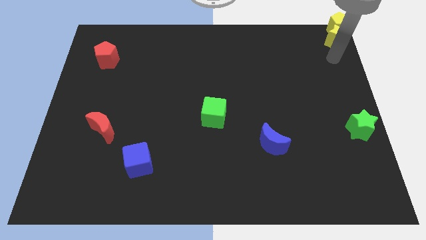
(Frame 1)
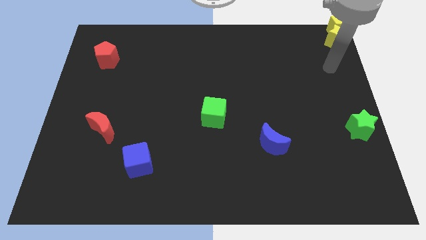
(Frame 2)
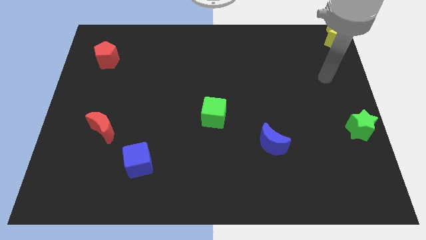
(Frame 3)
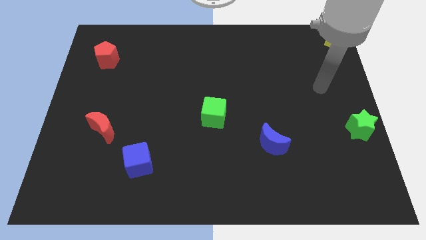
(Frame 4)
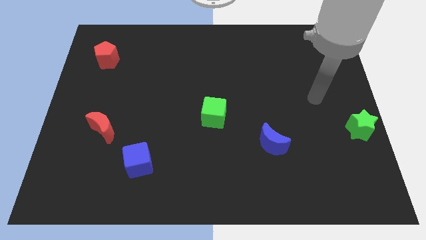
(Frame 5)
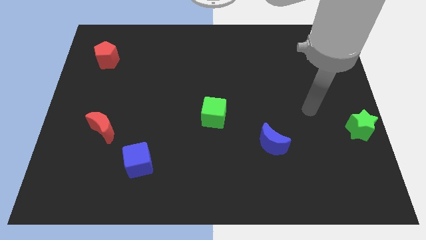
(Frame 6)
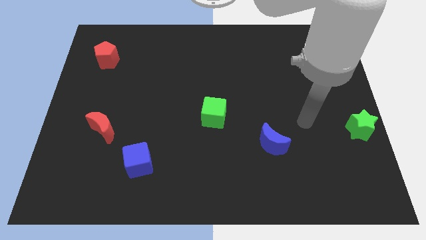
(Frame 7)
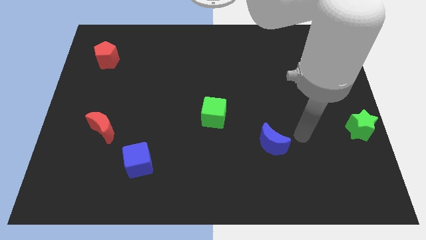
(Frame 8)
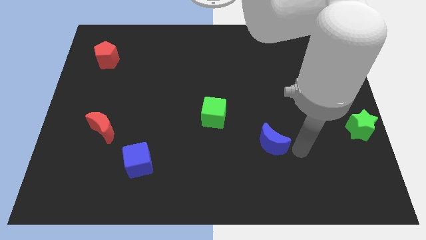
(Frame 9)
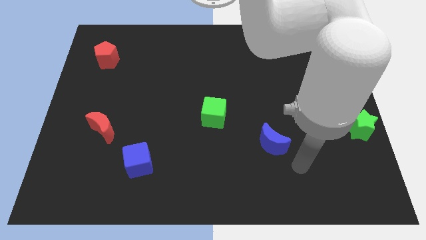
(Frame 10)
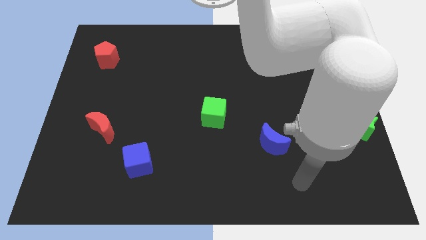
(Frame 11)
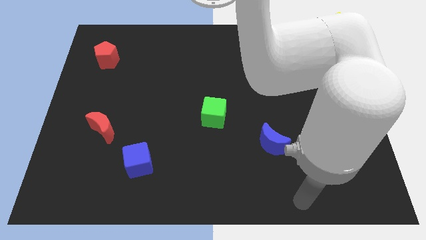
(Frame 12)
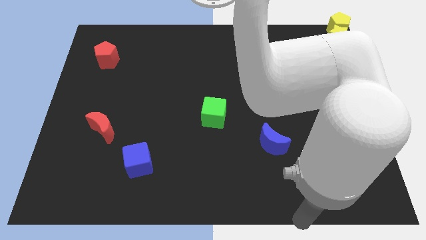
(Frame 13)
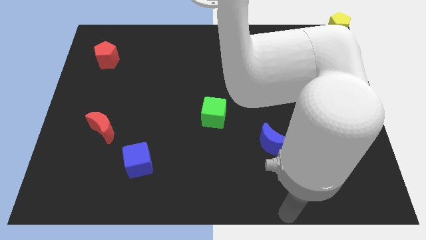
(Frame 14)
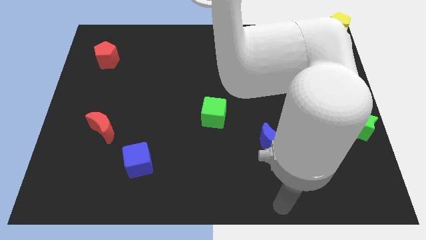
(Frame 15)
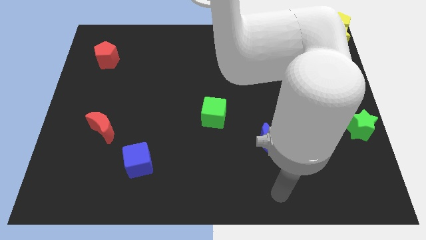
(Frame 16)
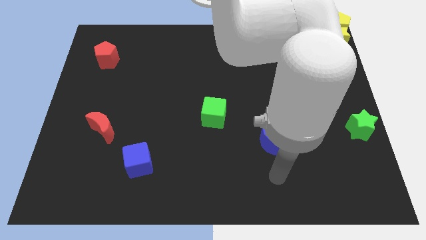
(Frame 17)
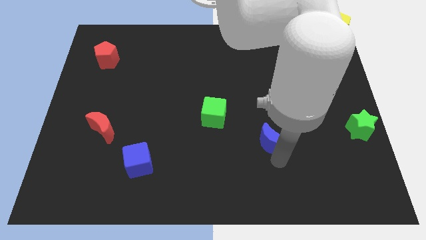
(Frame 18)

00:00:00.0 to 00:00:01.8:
move your arm towards blue crescent

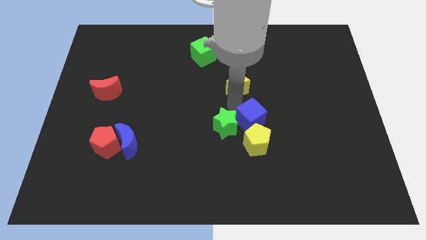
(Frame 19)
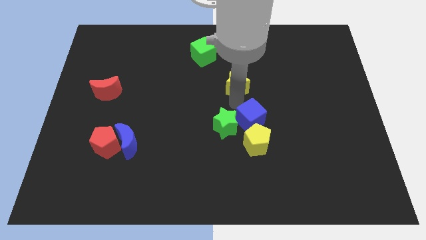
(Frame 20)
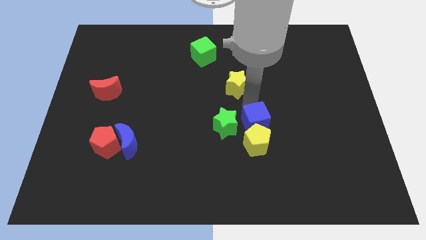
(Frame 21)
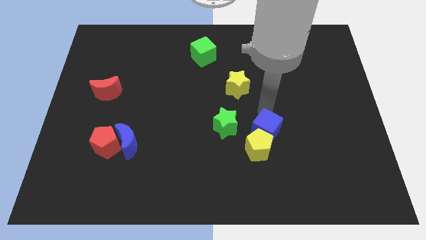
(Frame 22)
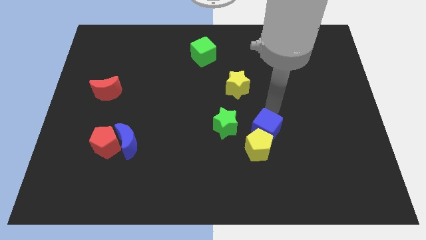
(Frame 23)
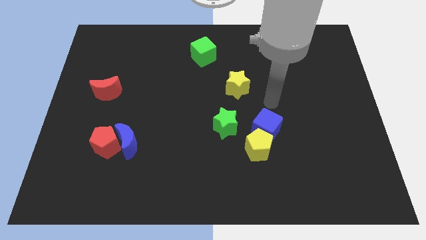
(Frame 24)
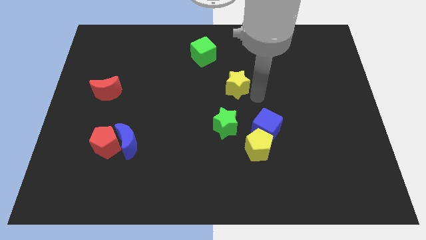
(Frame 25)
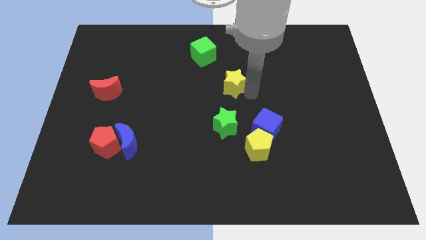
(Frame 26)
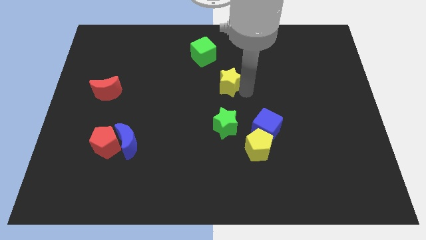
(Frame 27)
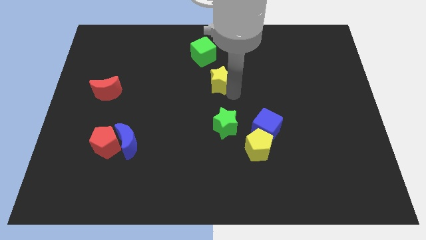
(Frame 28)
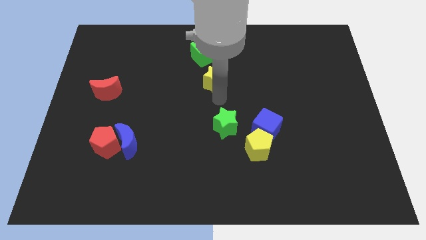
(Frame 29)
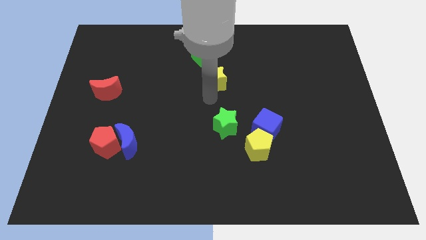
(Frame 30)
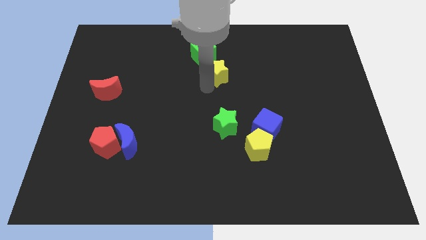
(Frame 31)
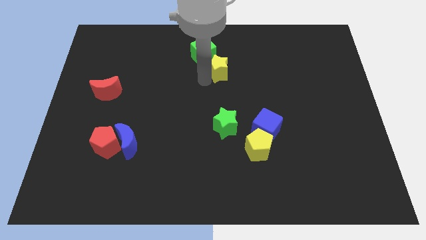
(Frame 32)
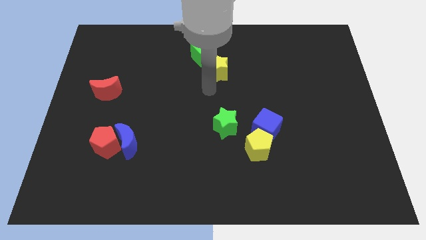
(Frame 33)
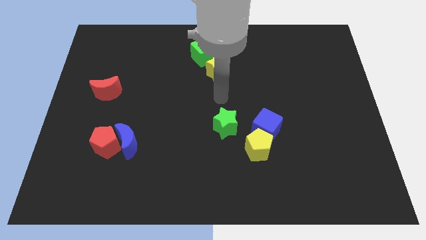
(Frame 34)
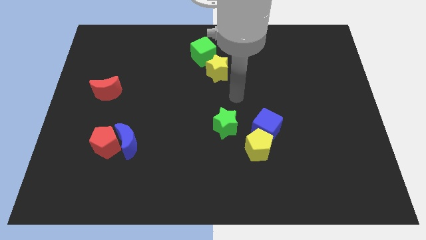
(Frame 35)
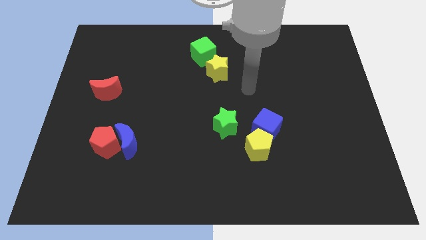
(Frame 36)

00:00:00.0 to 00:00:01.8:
place the yellow star below the green cube

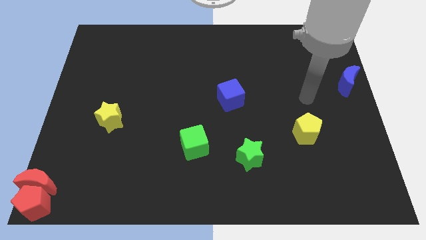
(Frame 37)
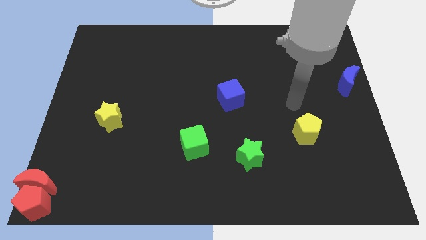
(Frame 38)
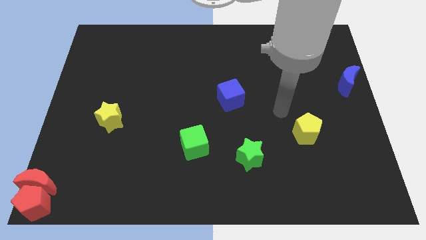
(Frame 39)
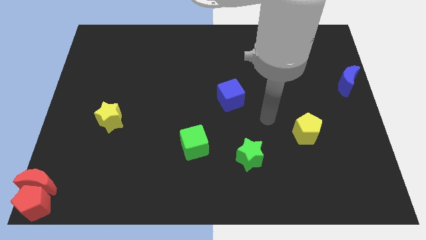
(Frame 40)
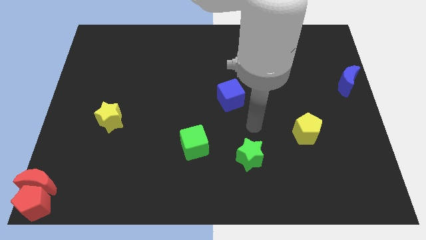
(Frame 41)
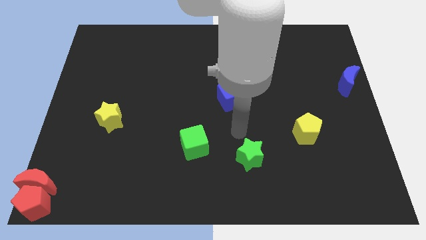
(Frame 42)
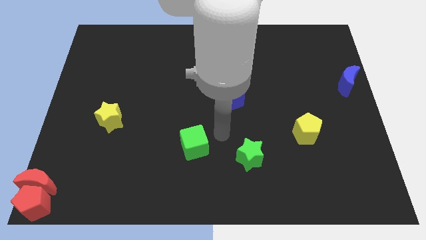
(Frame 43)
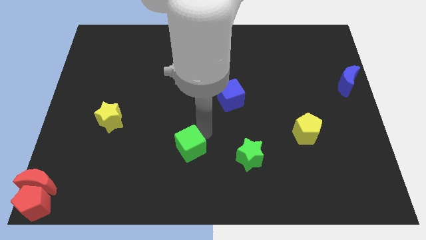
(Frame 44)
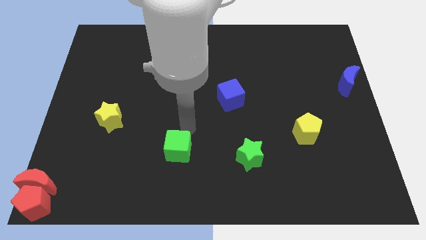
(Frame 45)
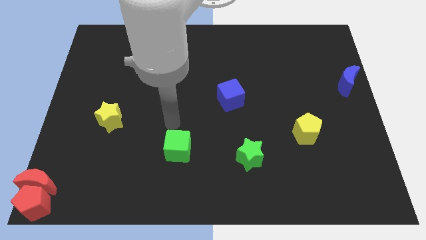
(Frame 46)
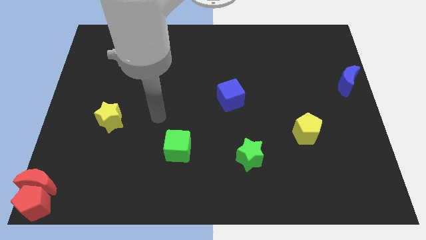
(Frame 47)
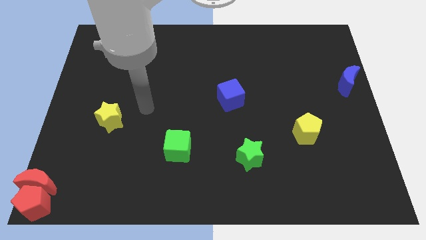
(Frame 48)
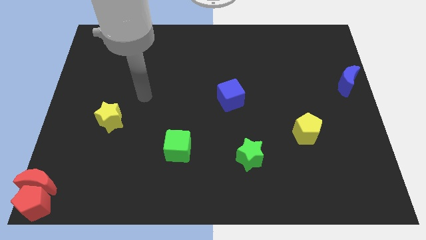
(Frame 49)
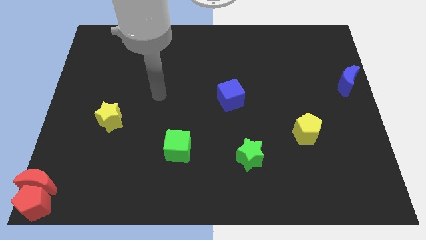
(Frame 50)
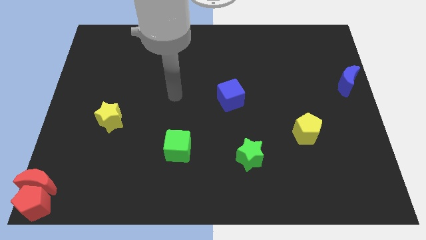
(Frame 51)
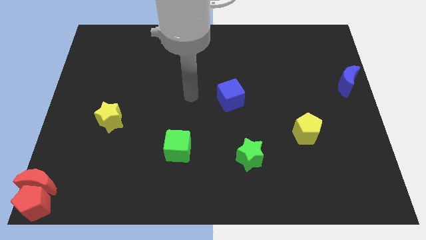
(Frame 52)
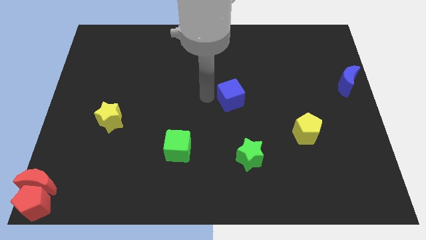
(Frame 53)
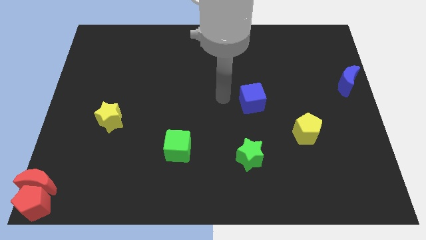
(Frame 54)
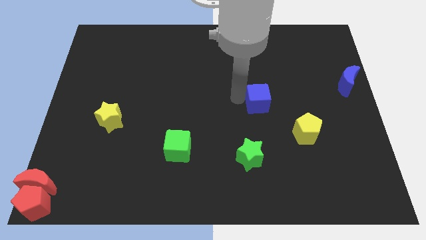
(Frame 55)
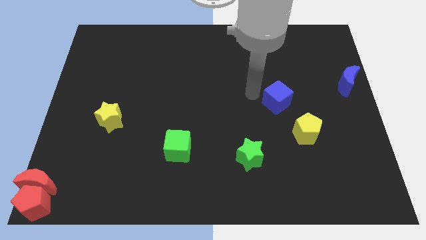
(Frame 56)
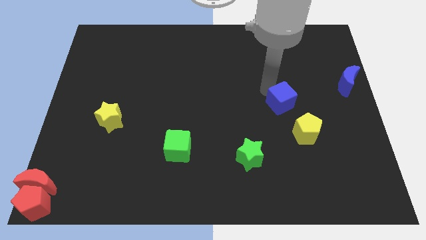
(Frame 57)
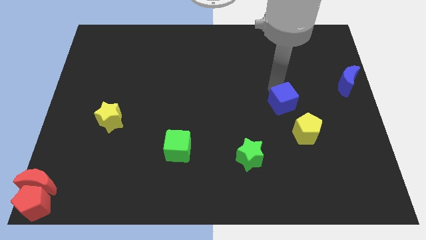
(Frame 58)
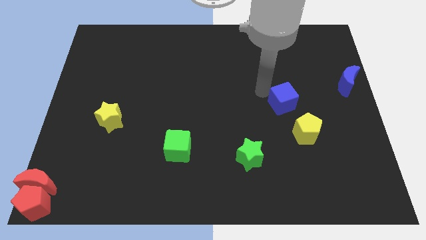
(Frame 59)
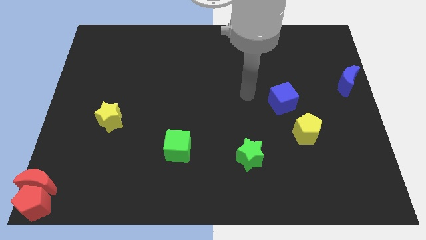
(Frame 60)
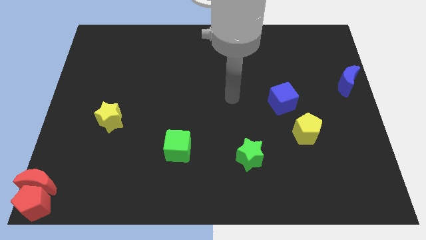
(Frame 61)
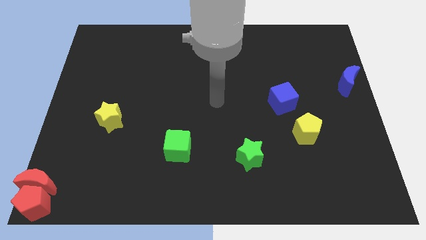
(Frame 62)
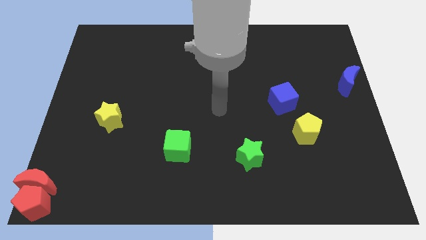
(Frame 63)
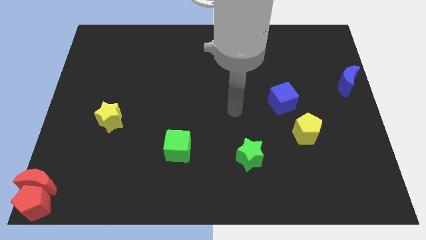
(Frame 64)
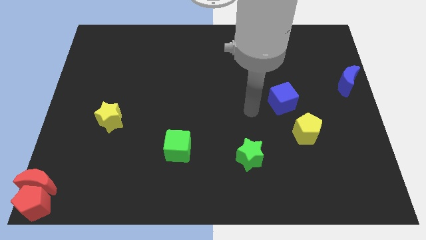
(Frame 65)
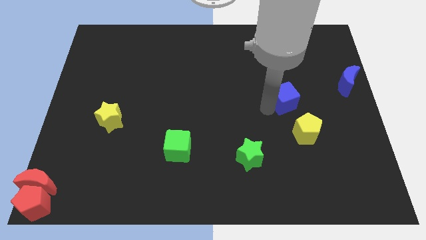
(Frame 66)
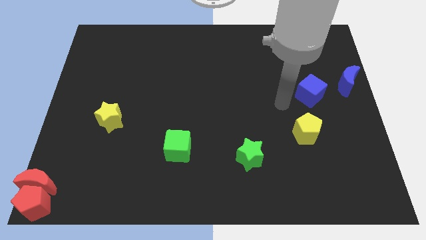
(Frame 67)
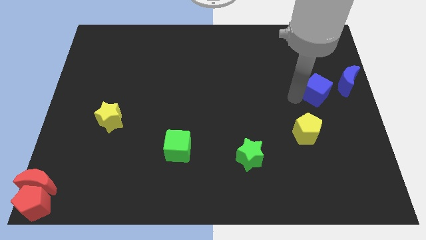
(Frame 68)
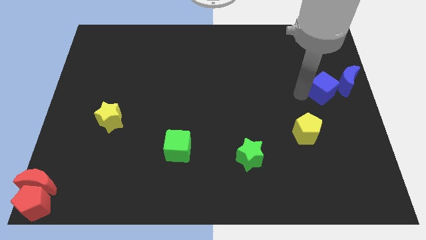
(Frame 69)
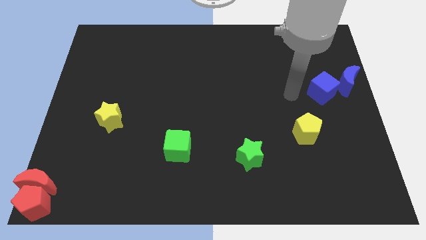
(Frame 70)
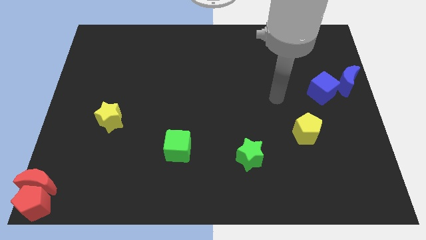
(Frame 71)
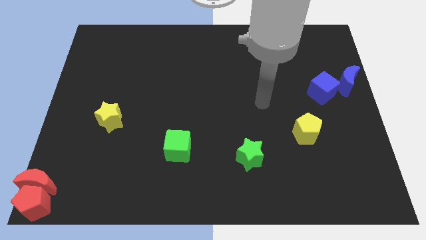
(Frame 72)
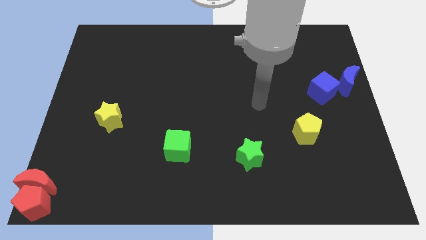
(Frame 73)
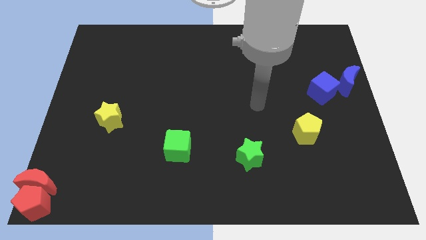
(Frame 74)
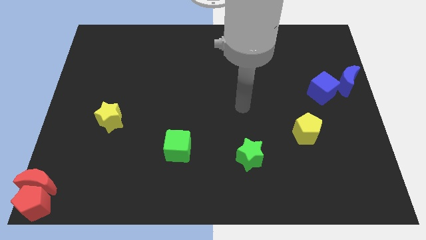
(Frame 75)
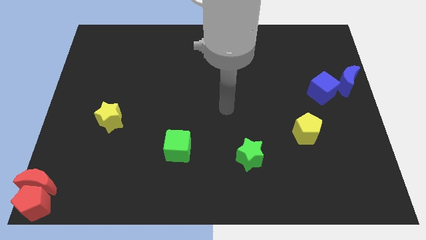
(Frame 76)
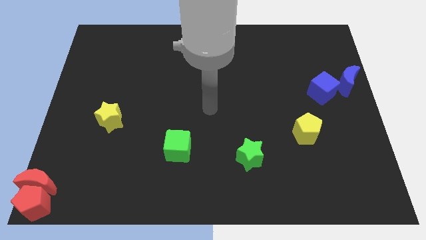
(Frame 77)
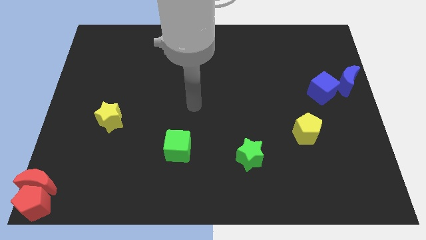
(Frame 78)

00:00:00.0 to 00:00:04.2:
place the blue cube beside the blue crescent

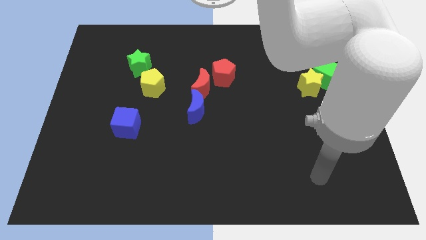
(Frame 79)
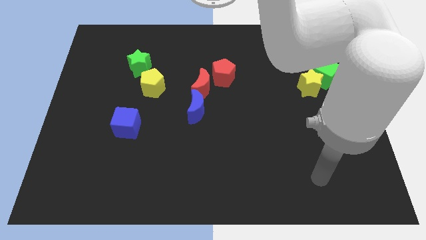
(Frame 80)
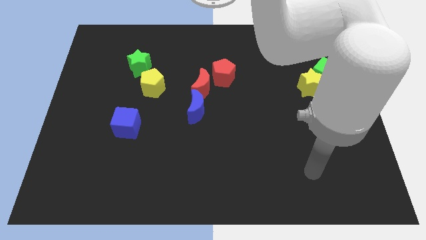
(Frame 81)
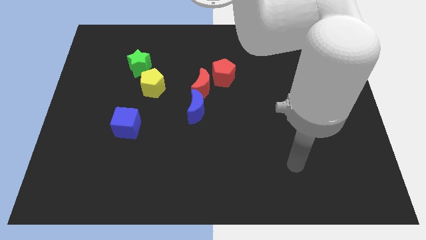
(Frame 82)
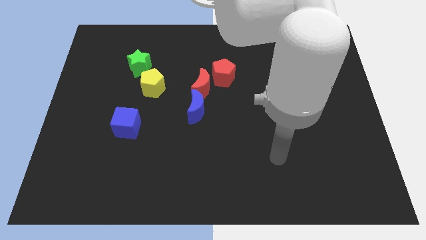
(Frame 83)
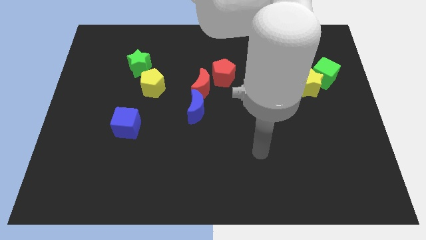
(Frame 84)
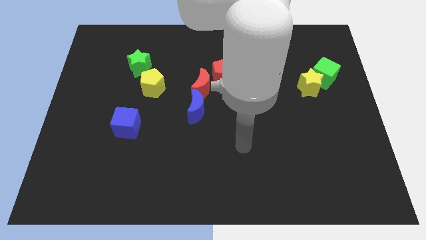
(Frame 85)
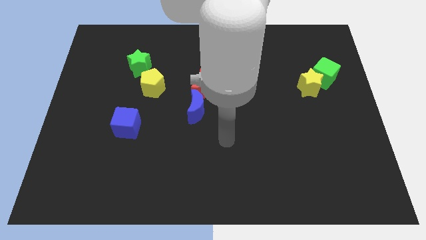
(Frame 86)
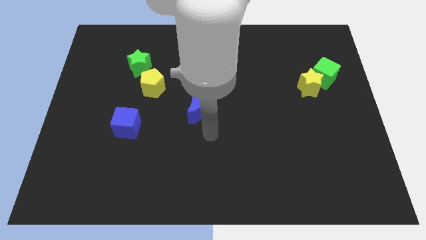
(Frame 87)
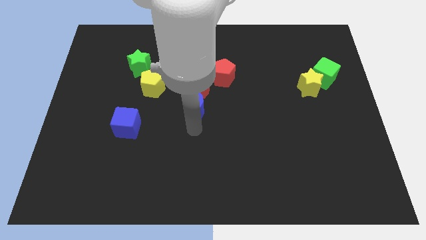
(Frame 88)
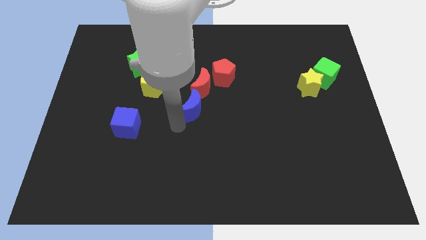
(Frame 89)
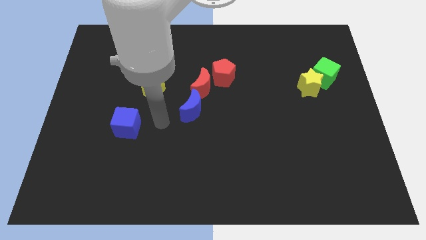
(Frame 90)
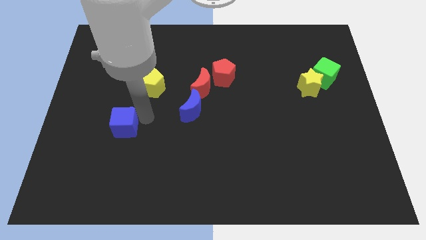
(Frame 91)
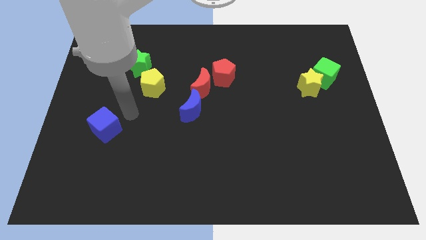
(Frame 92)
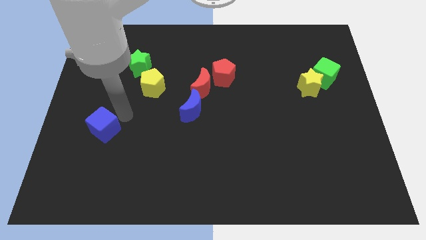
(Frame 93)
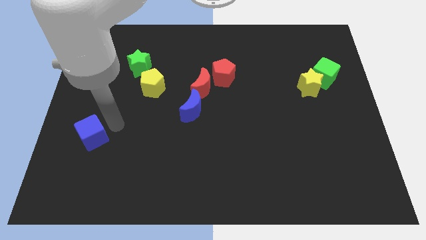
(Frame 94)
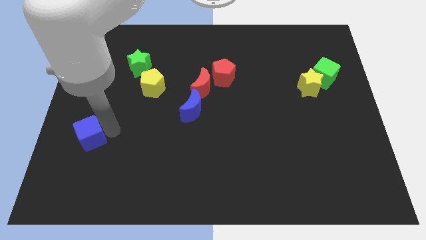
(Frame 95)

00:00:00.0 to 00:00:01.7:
push the blue cube towards the bottom left side of the board
